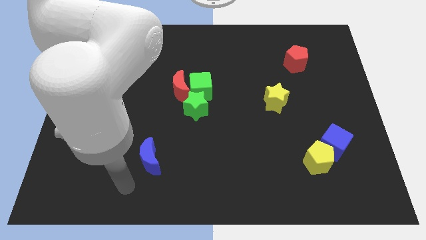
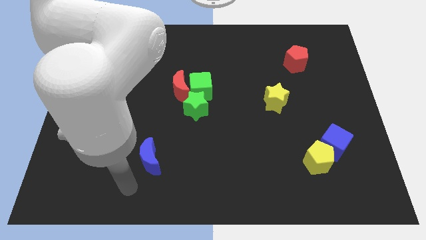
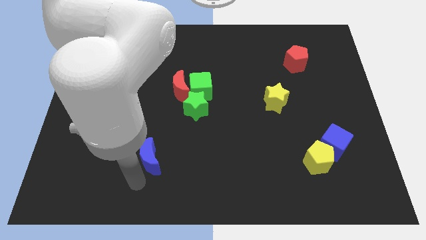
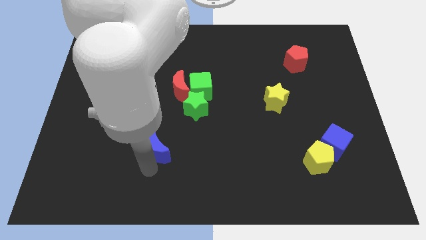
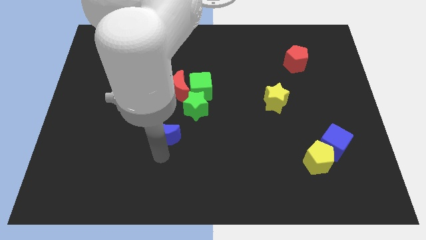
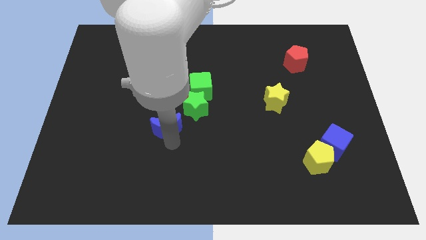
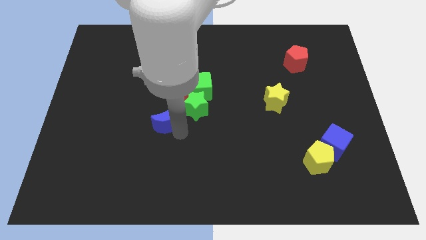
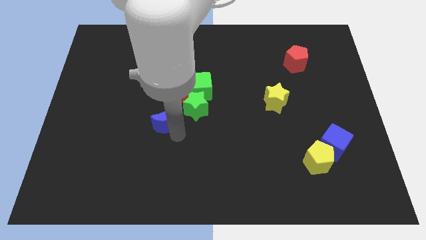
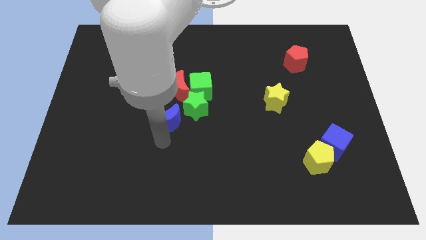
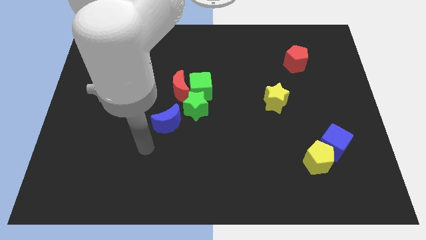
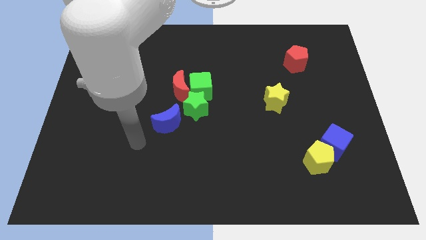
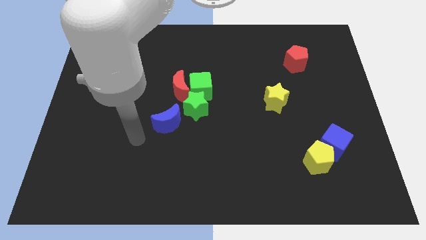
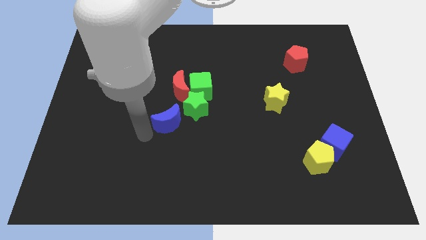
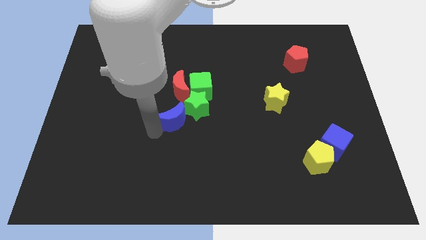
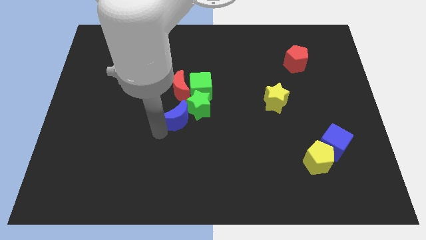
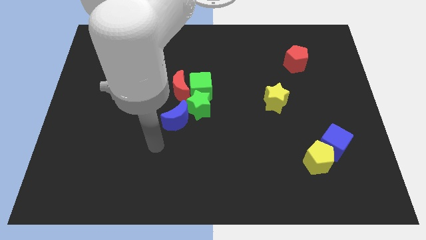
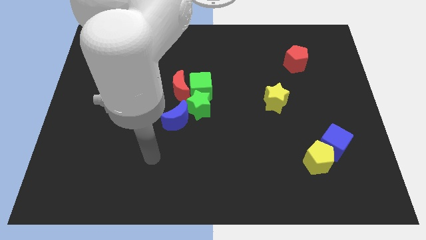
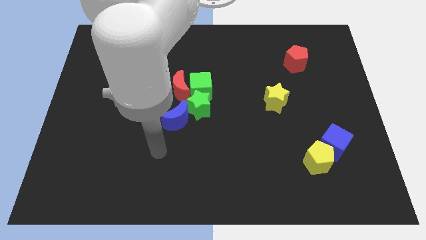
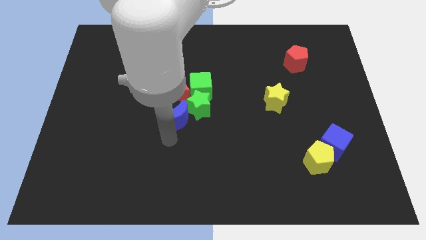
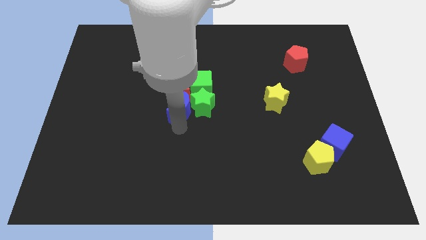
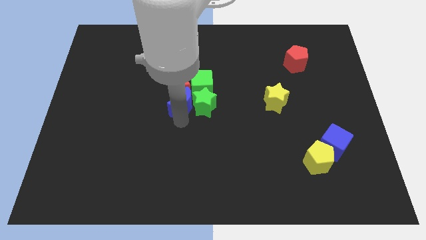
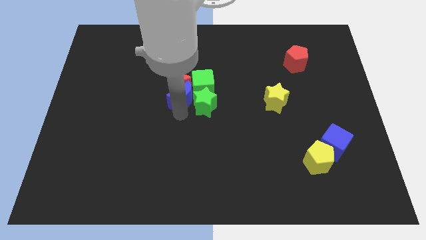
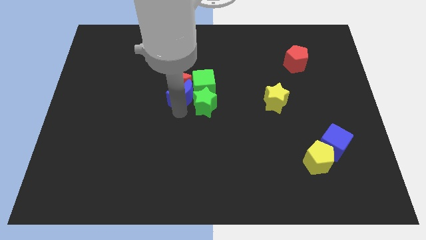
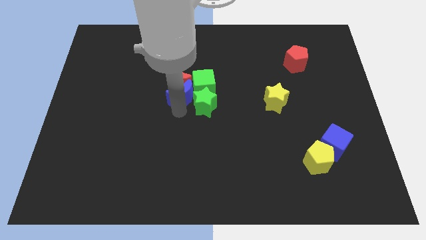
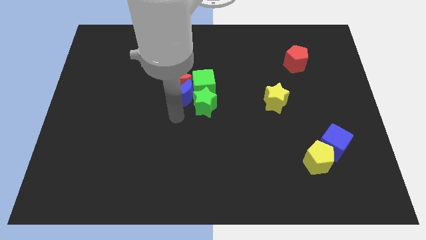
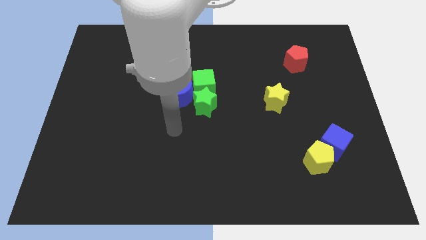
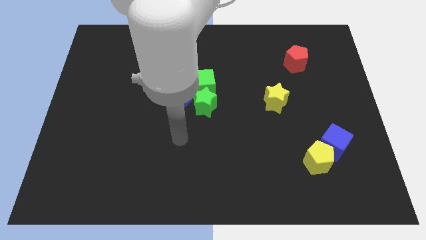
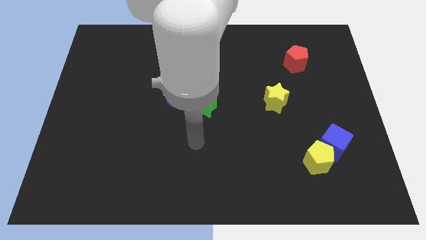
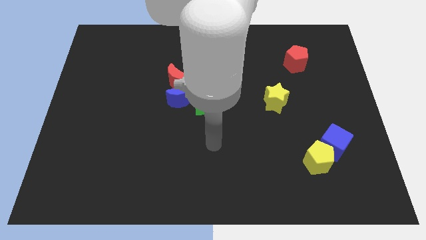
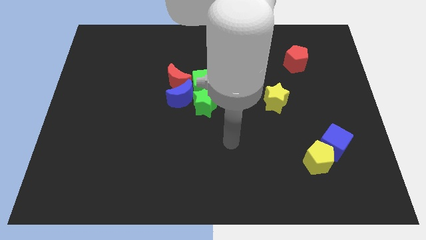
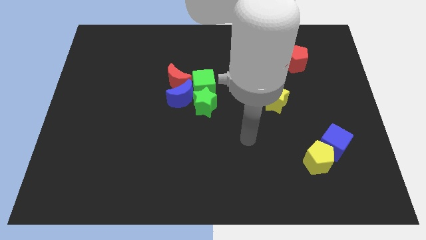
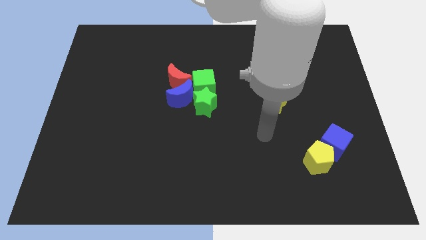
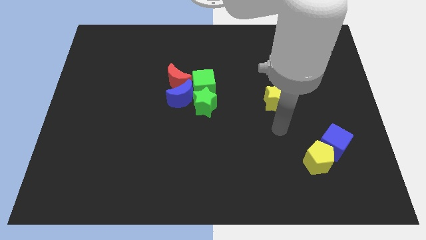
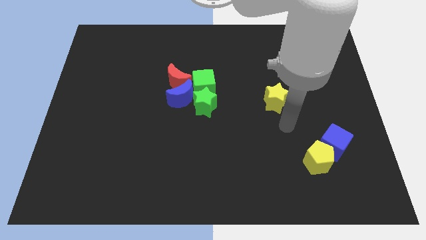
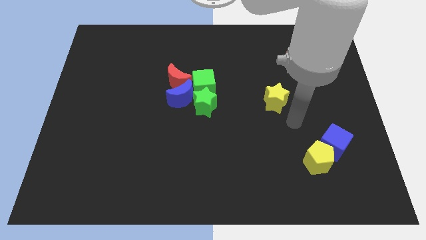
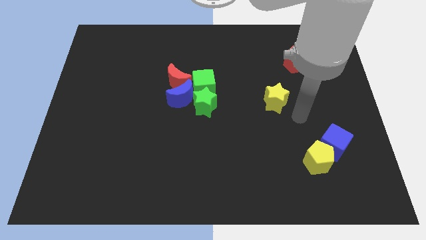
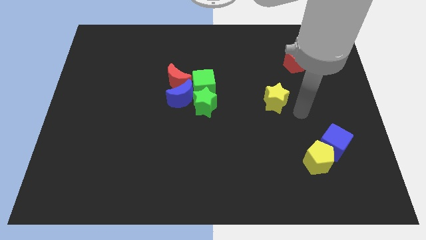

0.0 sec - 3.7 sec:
push the blue moon to the left of the green cube

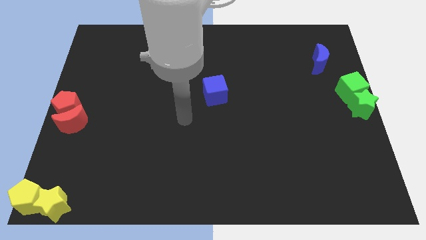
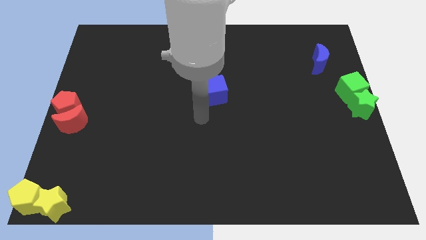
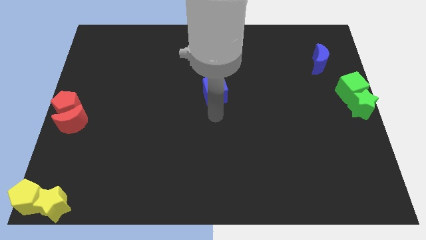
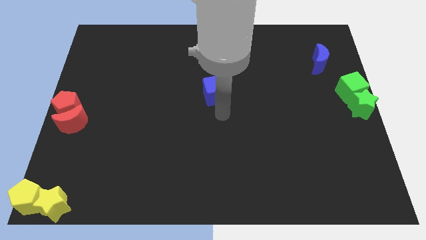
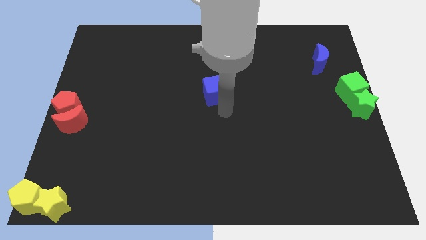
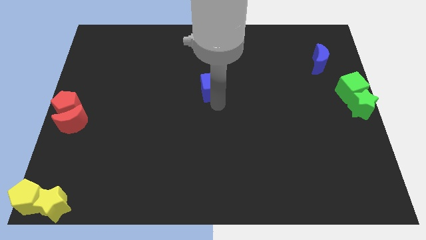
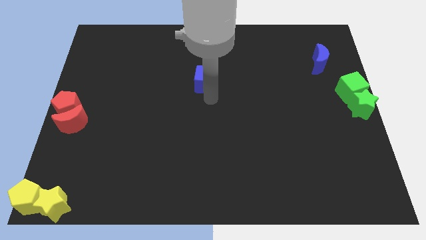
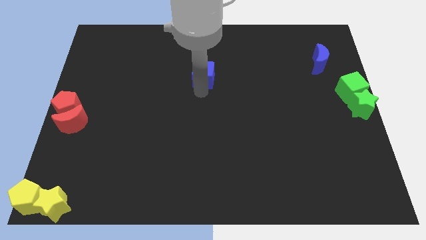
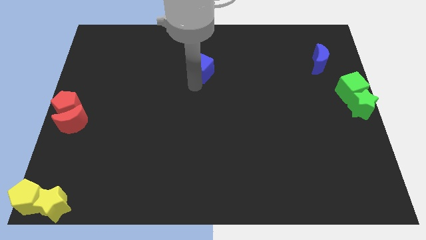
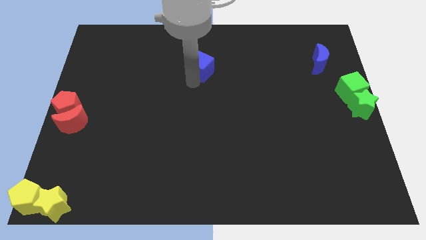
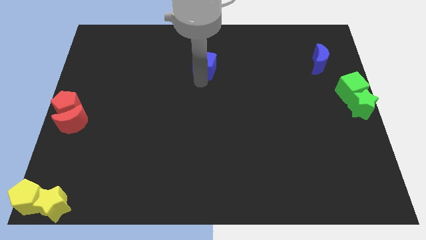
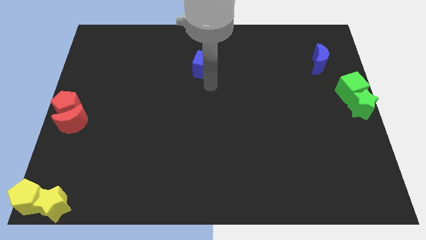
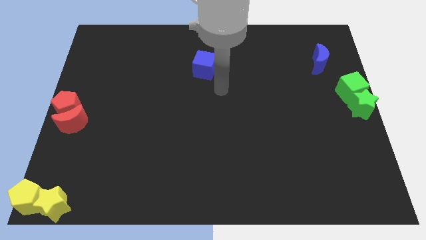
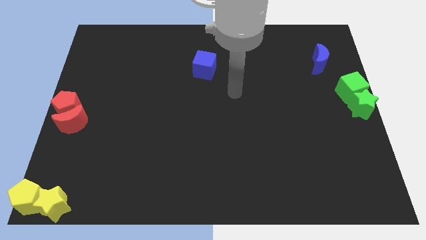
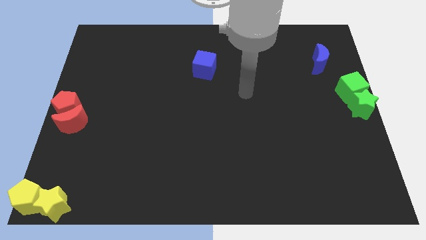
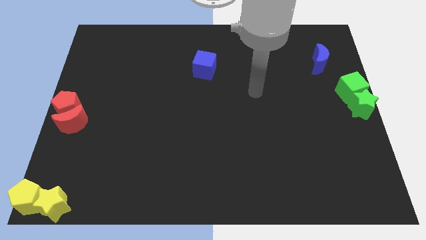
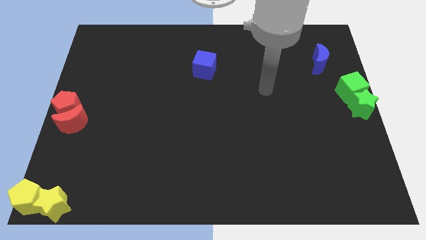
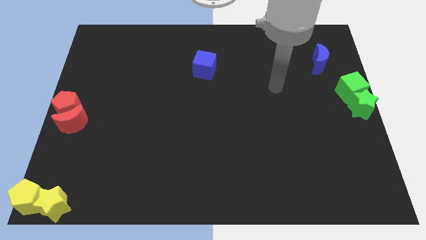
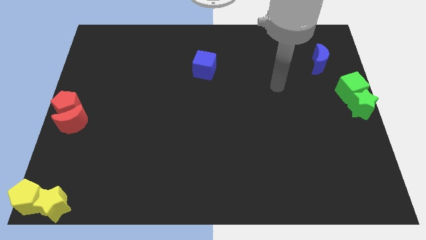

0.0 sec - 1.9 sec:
move the blue cube to the top center on the board

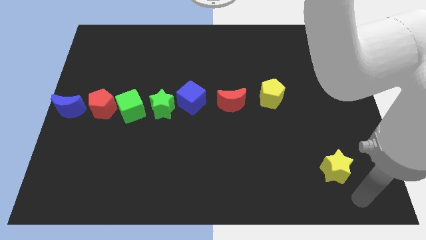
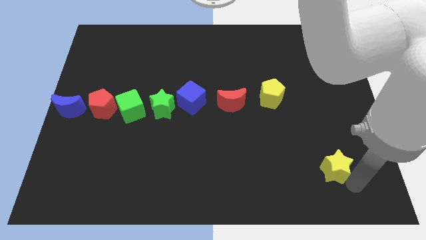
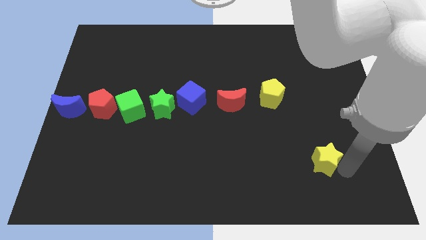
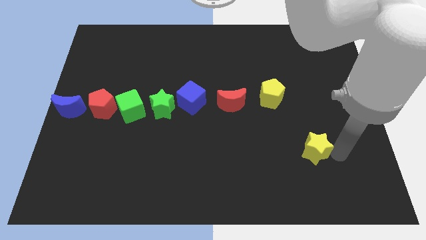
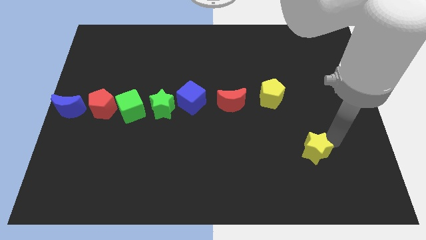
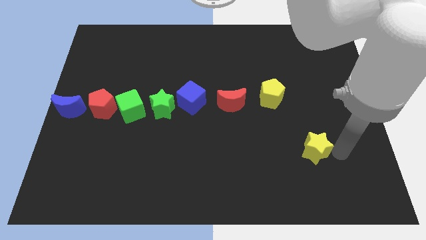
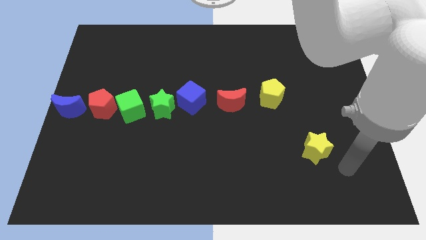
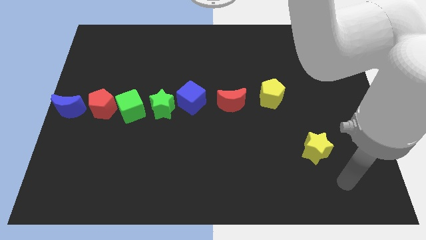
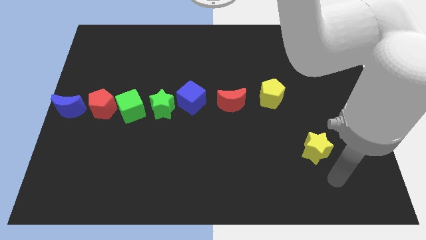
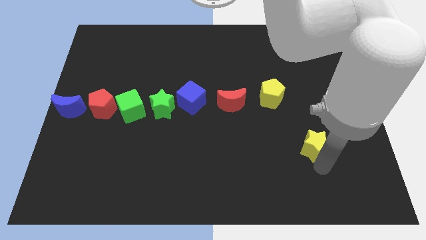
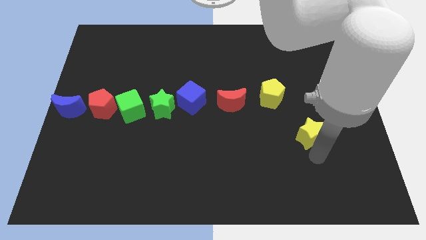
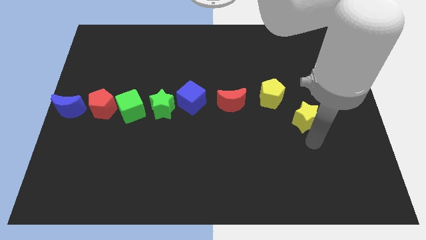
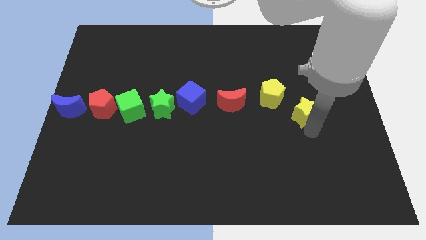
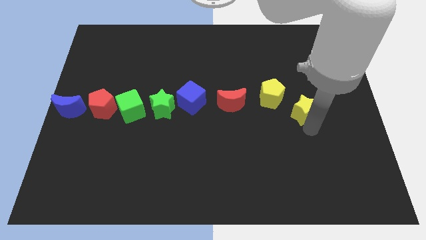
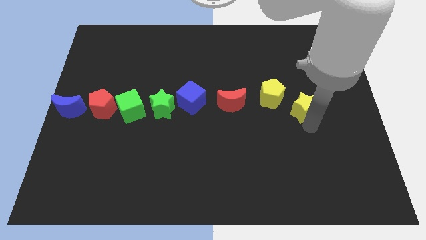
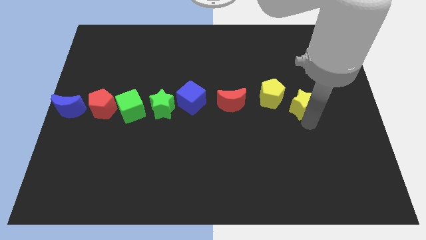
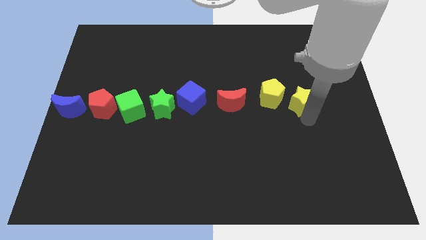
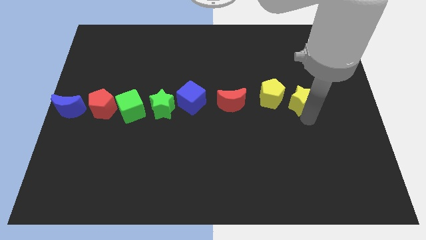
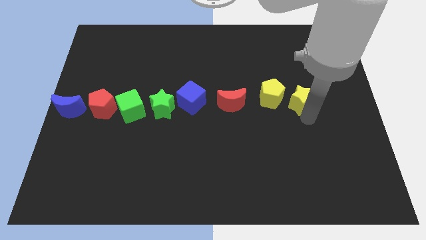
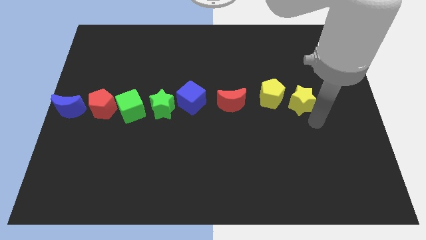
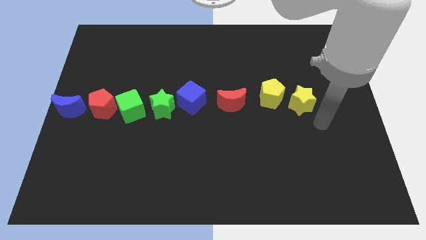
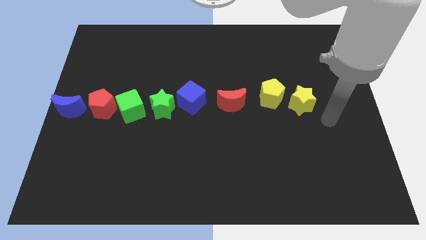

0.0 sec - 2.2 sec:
push the yellow star to the right of the yellow pentagon

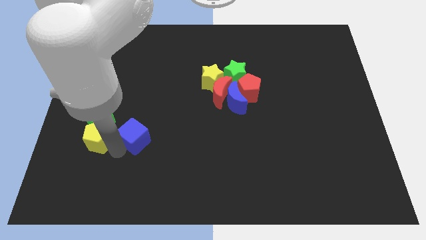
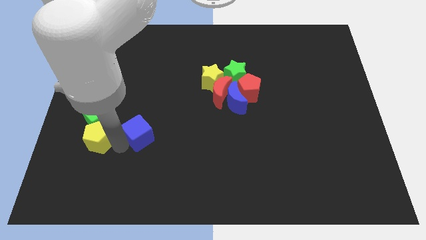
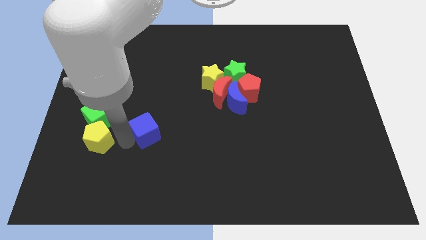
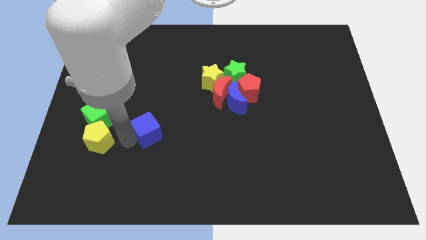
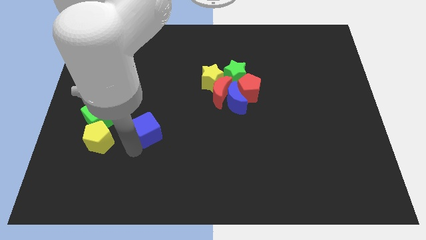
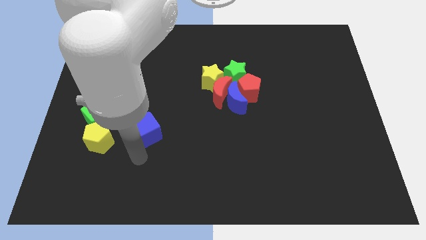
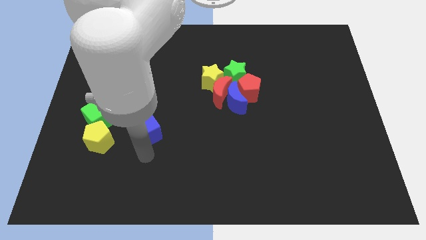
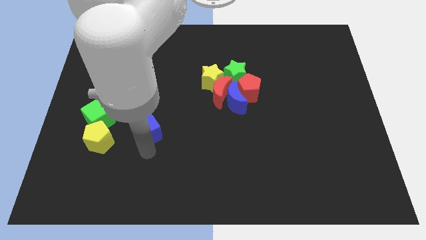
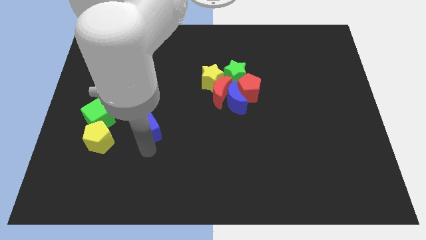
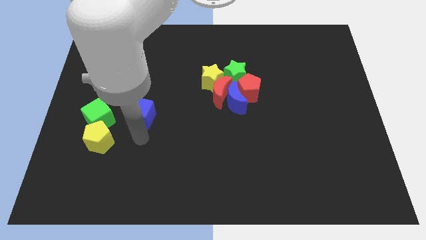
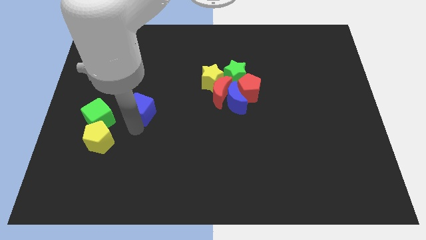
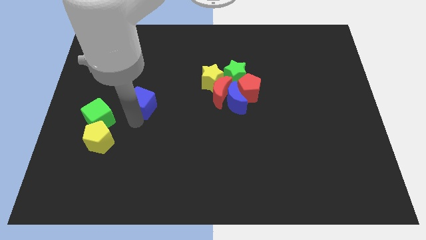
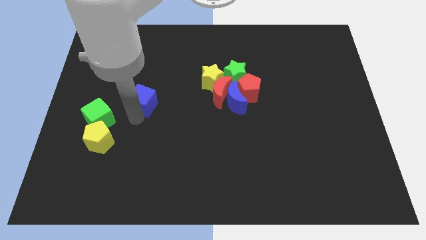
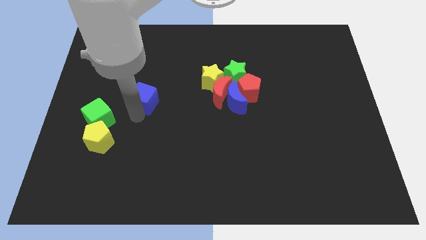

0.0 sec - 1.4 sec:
push the blue cube to the top slightly
